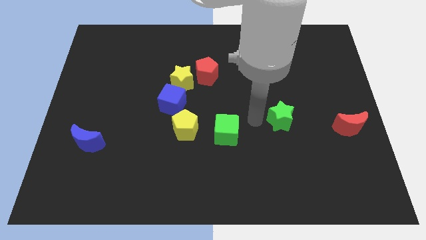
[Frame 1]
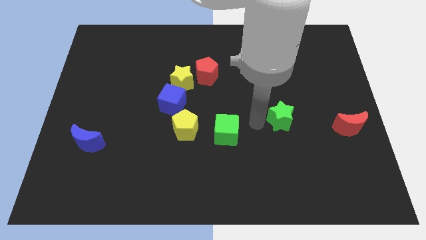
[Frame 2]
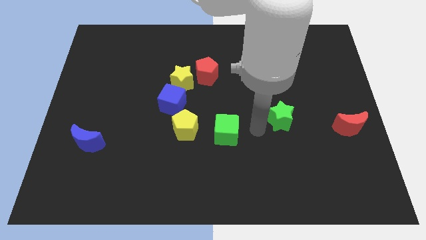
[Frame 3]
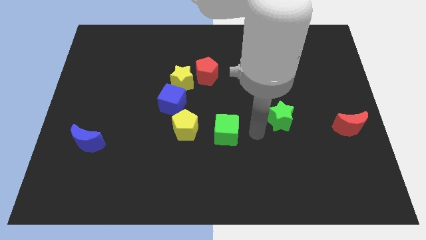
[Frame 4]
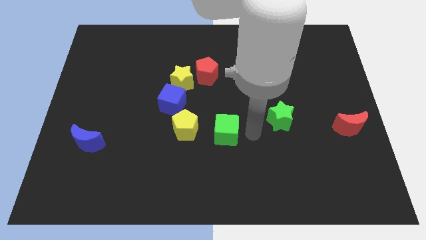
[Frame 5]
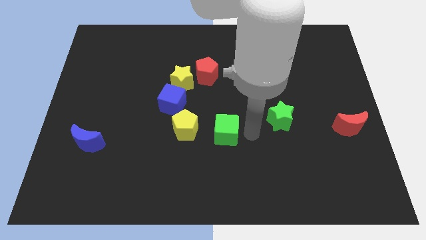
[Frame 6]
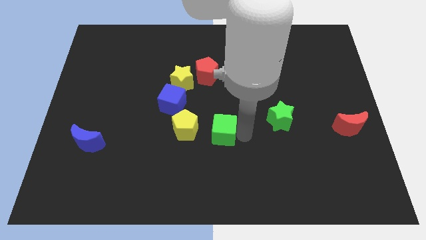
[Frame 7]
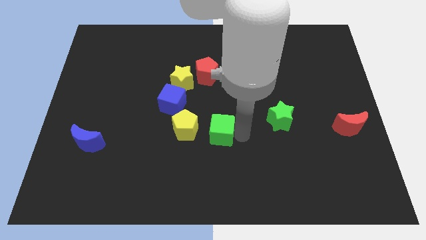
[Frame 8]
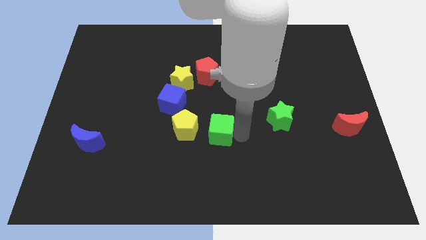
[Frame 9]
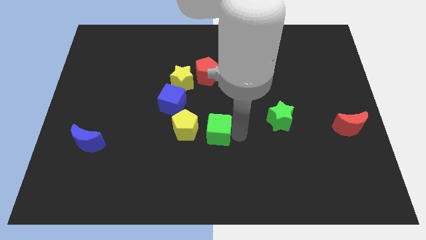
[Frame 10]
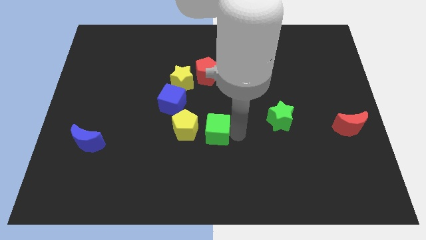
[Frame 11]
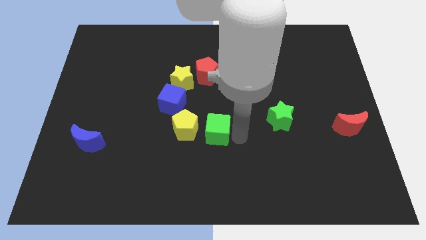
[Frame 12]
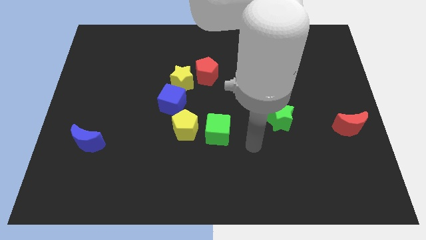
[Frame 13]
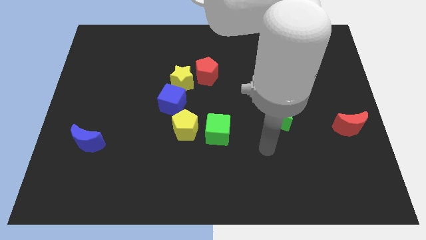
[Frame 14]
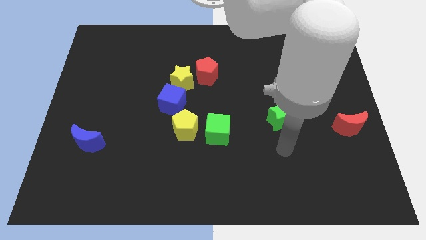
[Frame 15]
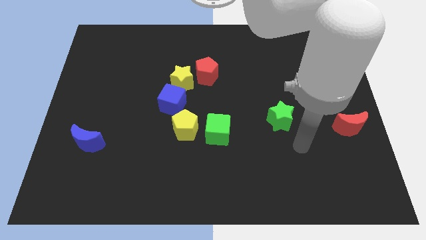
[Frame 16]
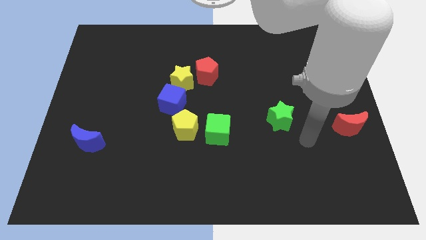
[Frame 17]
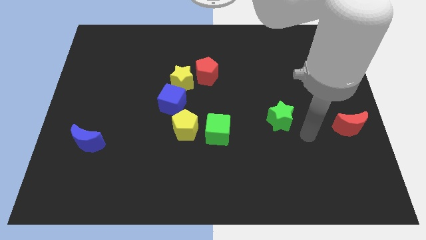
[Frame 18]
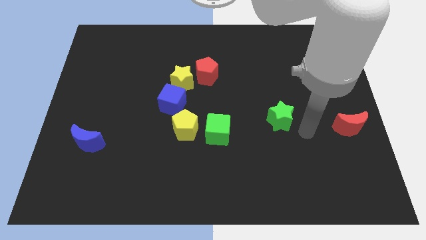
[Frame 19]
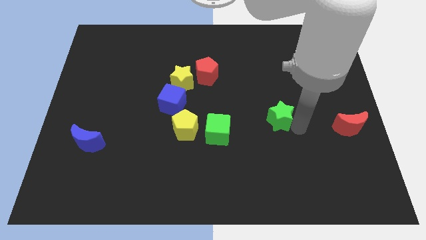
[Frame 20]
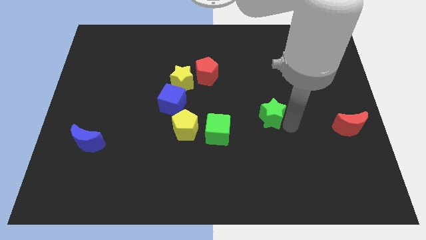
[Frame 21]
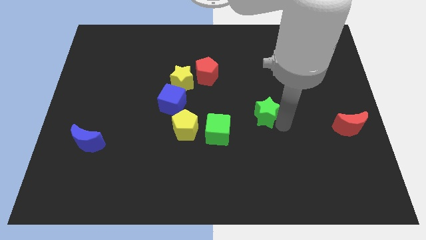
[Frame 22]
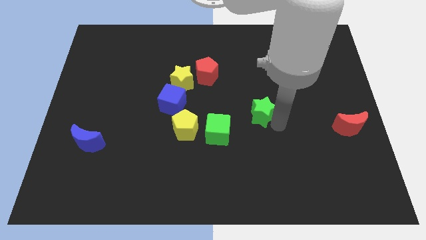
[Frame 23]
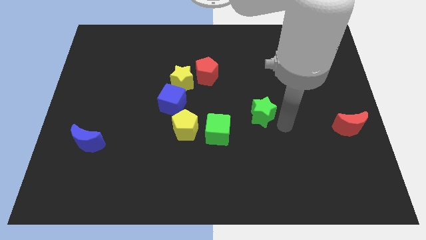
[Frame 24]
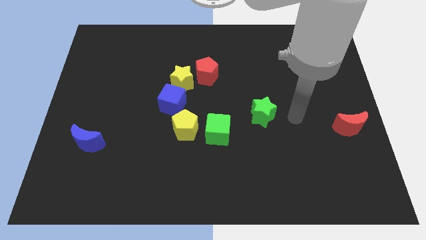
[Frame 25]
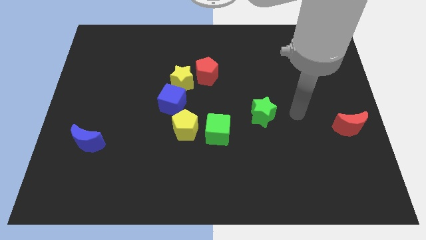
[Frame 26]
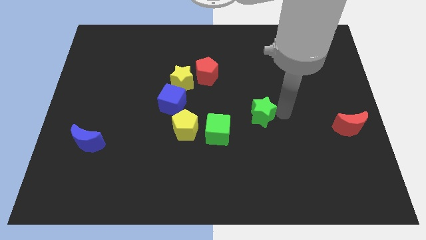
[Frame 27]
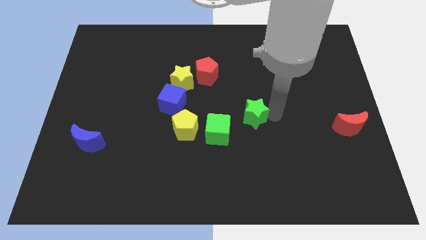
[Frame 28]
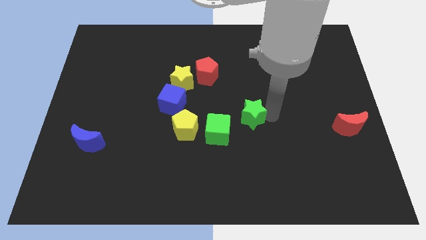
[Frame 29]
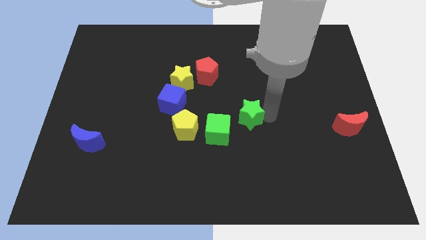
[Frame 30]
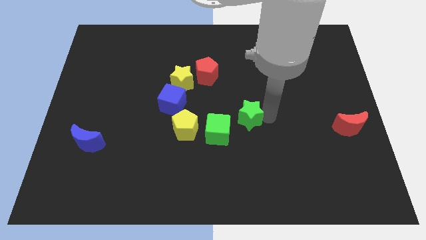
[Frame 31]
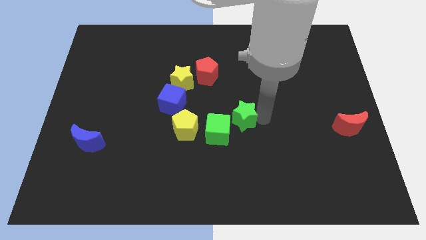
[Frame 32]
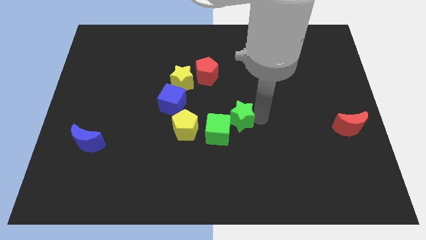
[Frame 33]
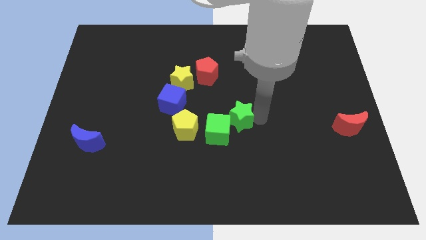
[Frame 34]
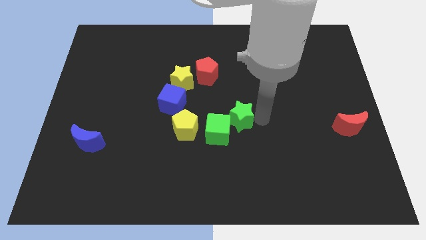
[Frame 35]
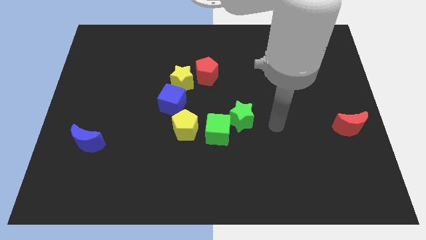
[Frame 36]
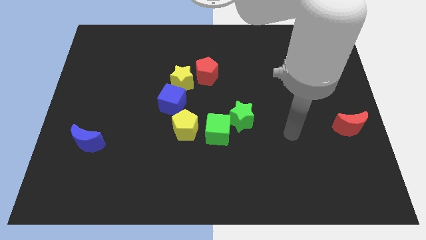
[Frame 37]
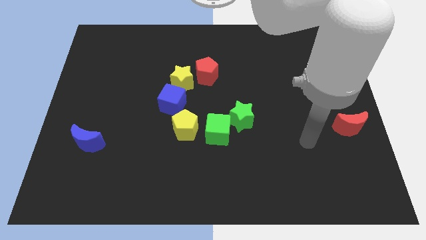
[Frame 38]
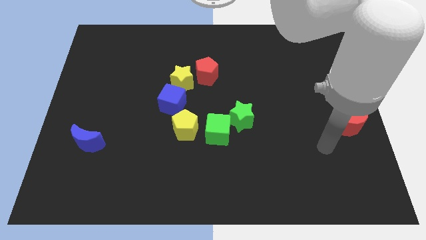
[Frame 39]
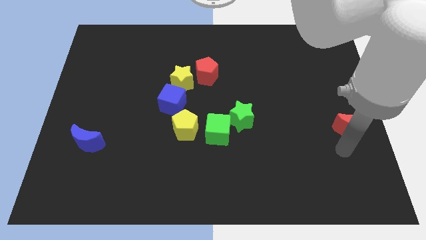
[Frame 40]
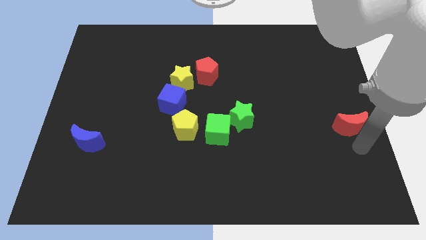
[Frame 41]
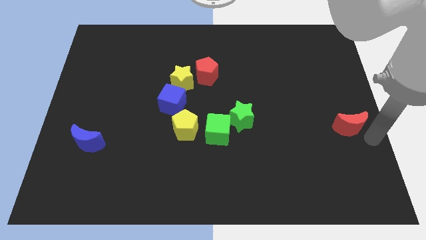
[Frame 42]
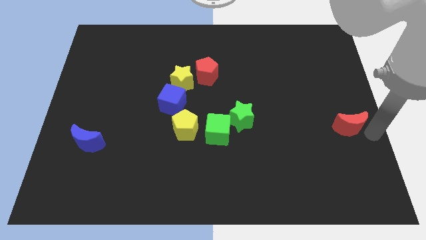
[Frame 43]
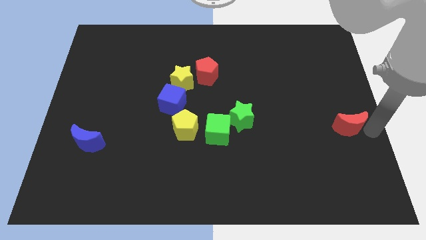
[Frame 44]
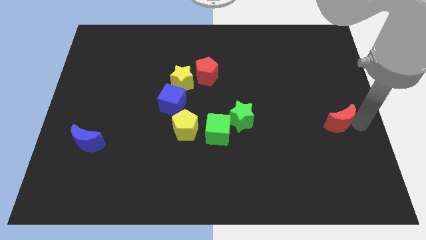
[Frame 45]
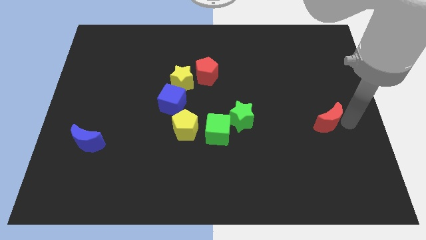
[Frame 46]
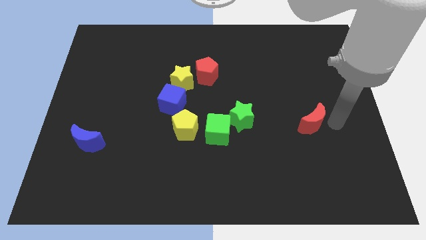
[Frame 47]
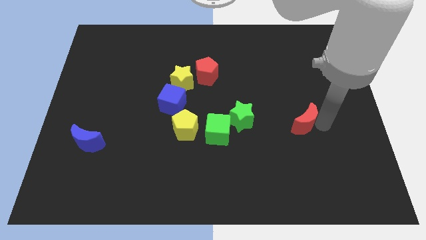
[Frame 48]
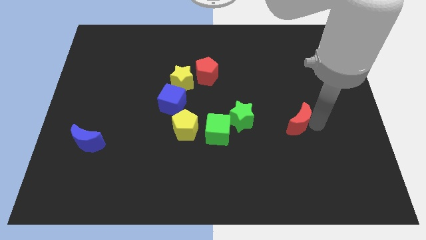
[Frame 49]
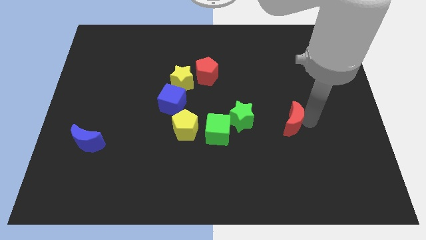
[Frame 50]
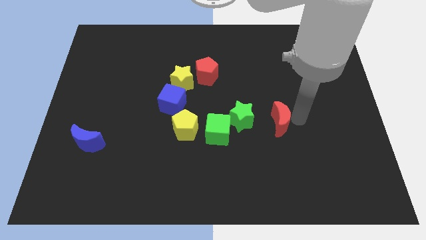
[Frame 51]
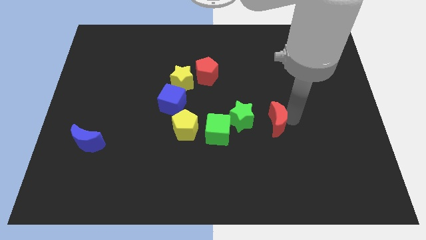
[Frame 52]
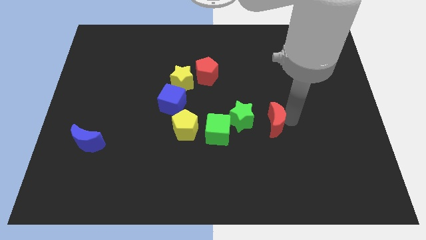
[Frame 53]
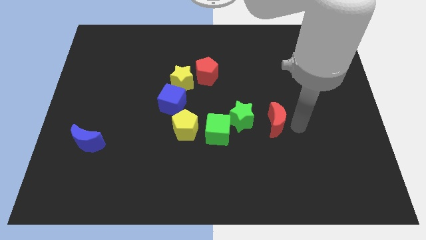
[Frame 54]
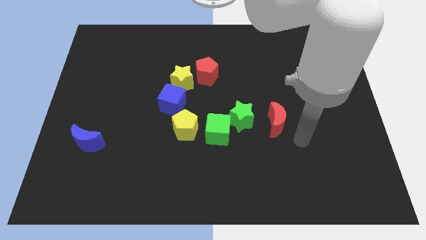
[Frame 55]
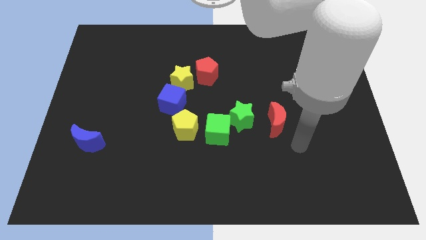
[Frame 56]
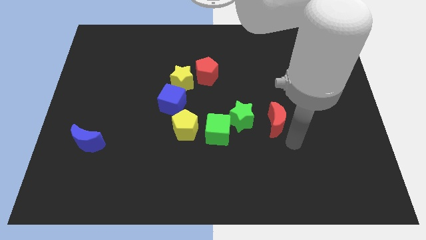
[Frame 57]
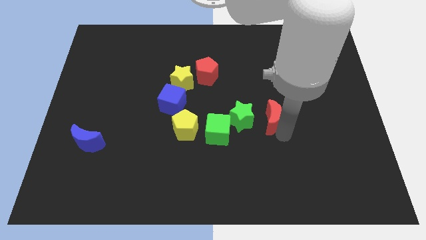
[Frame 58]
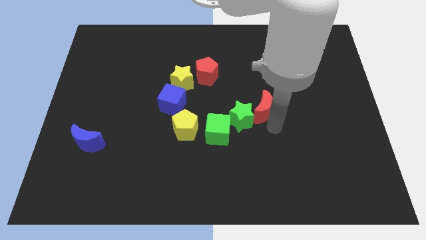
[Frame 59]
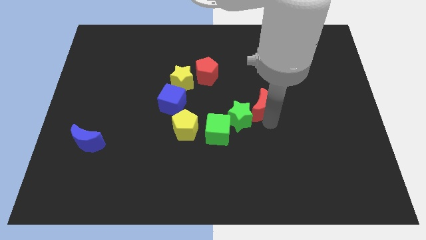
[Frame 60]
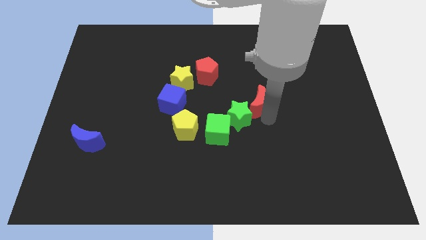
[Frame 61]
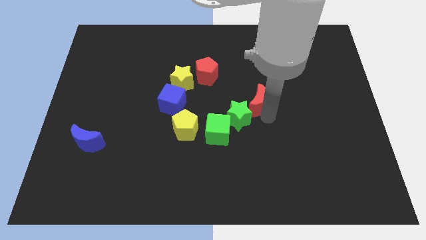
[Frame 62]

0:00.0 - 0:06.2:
push the green star close to the green cube

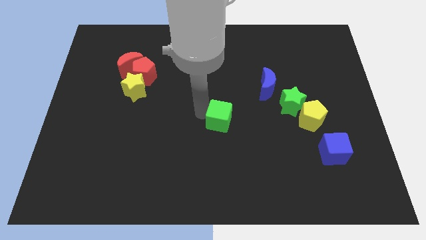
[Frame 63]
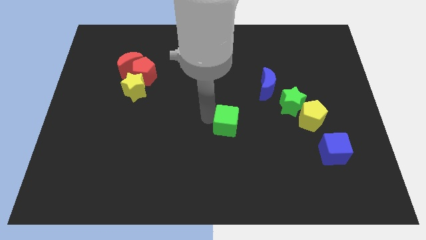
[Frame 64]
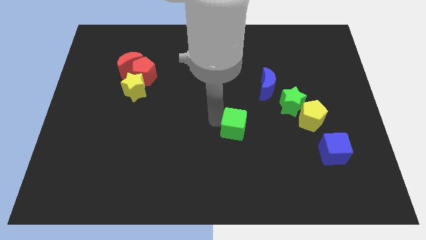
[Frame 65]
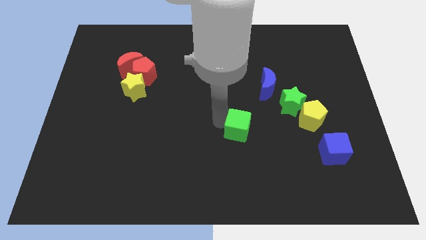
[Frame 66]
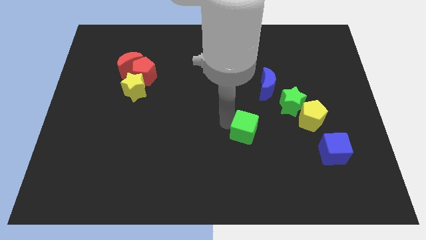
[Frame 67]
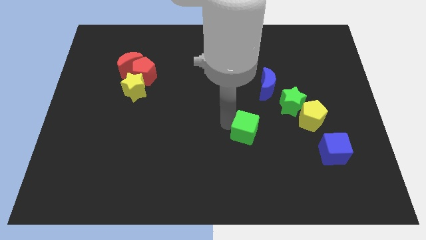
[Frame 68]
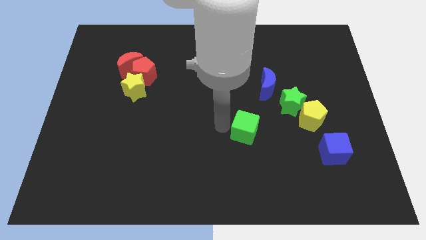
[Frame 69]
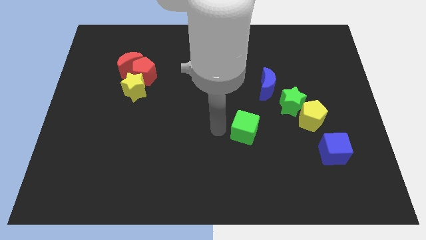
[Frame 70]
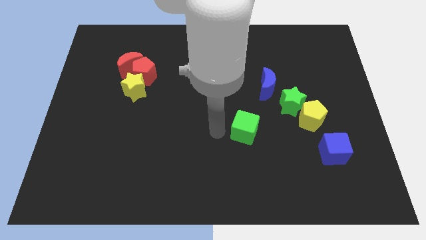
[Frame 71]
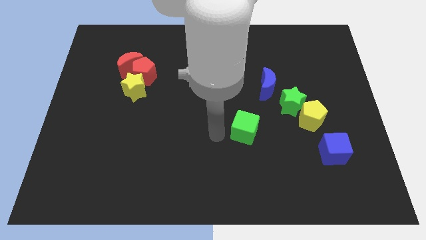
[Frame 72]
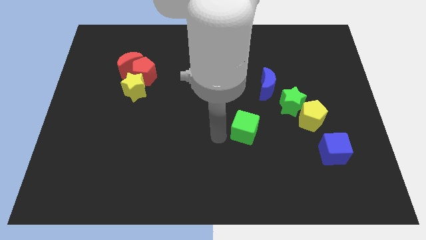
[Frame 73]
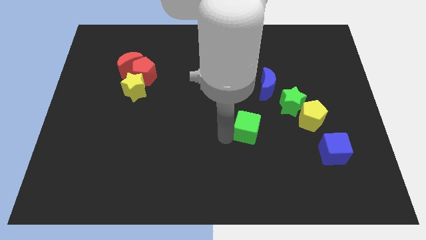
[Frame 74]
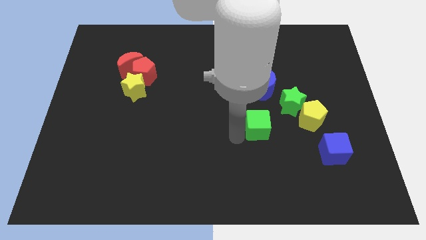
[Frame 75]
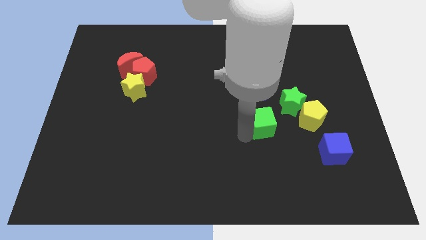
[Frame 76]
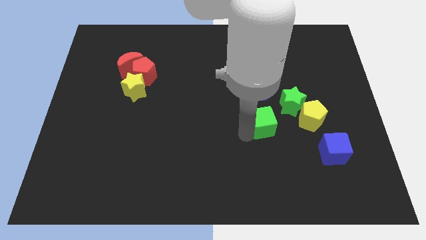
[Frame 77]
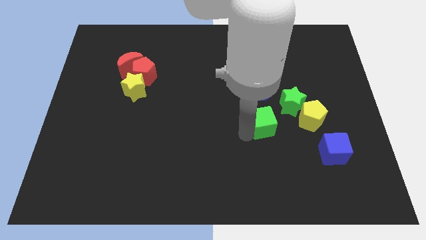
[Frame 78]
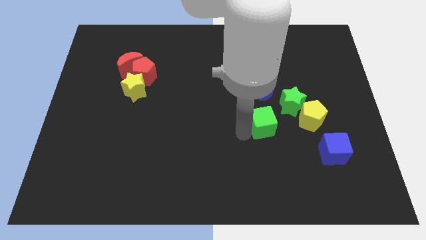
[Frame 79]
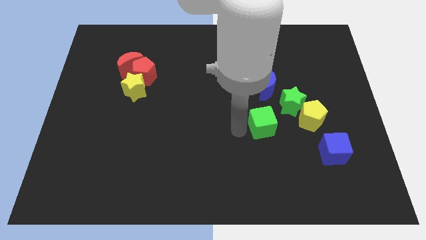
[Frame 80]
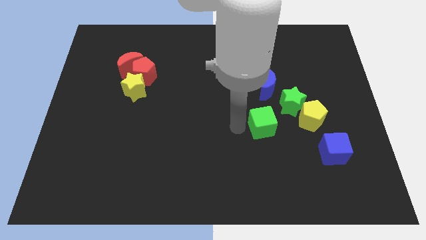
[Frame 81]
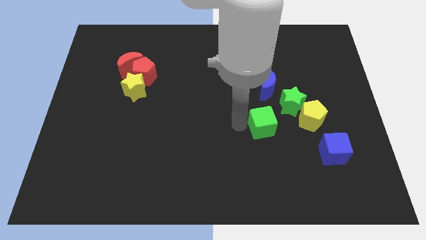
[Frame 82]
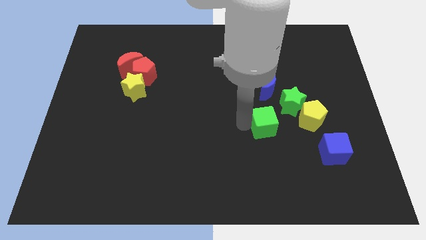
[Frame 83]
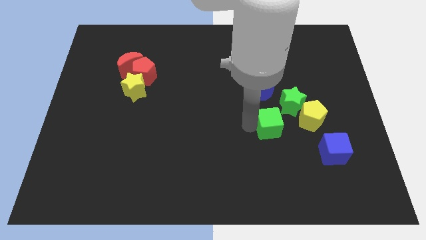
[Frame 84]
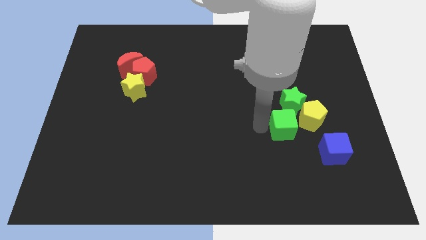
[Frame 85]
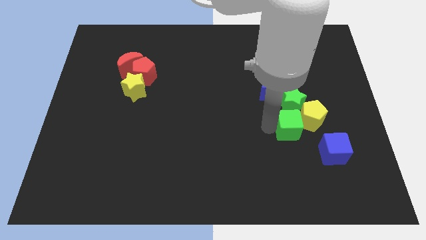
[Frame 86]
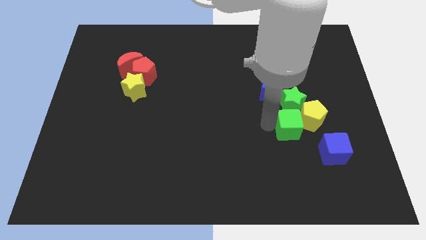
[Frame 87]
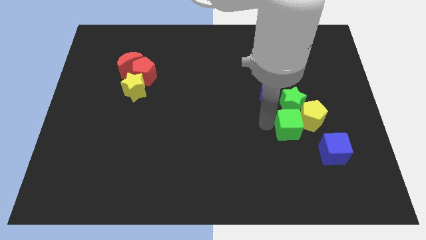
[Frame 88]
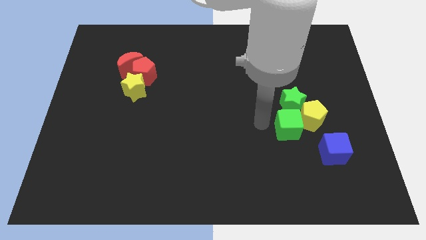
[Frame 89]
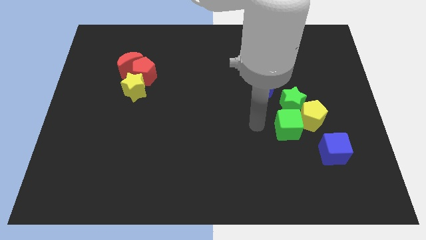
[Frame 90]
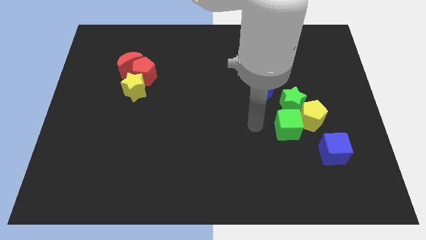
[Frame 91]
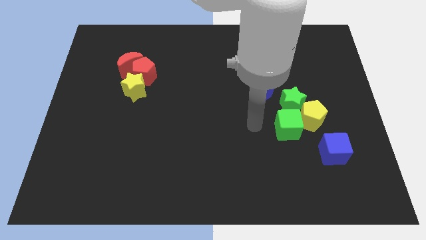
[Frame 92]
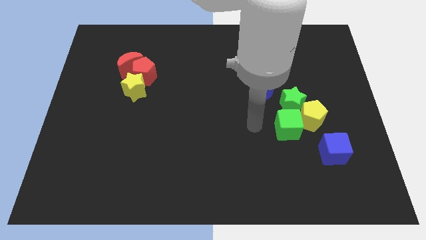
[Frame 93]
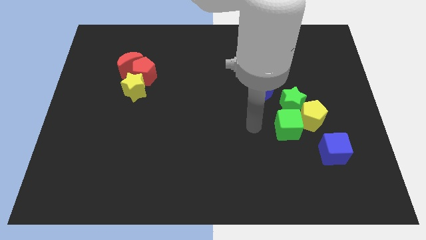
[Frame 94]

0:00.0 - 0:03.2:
put the green cube below the green star
